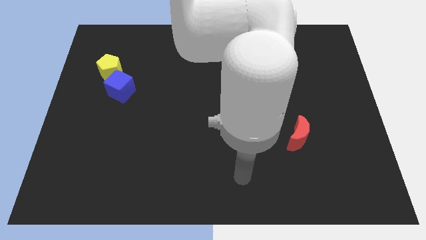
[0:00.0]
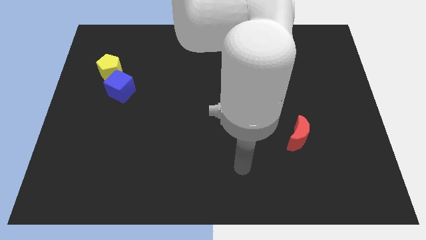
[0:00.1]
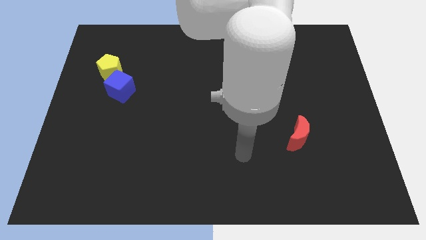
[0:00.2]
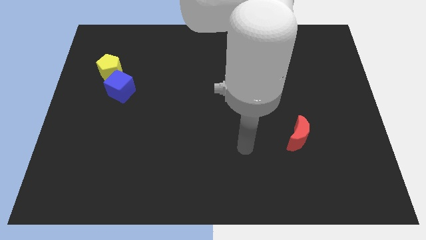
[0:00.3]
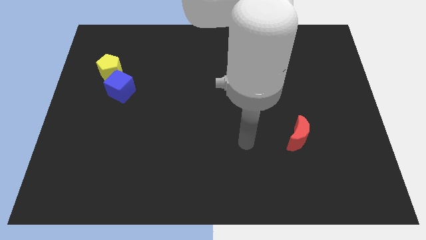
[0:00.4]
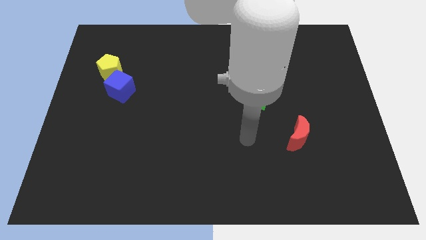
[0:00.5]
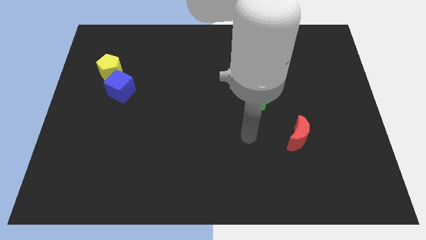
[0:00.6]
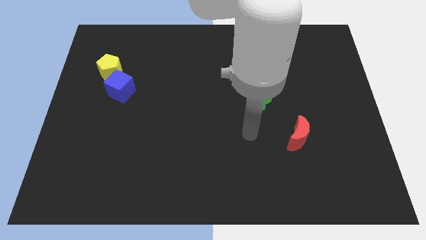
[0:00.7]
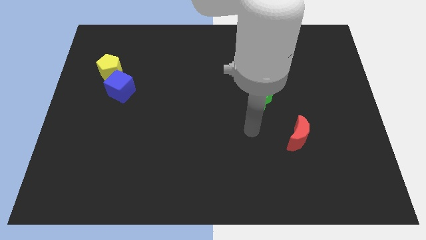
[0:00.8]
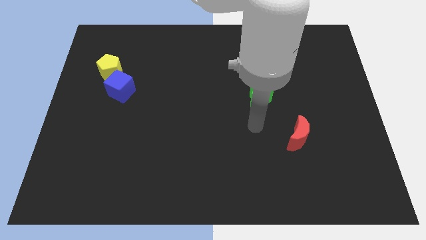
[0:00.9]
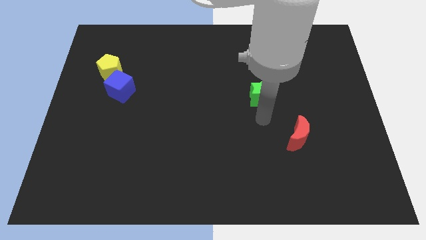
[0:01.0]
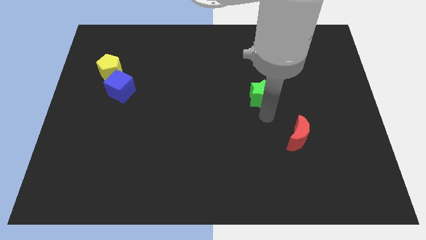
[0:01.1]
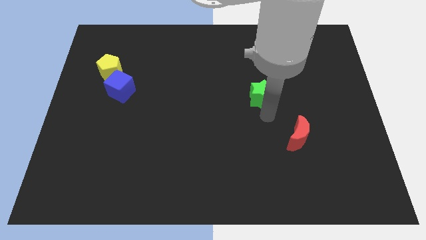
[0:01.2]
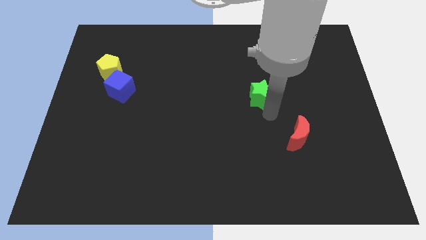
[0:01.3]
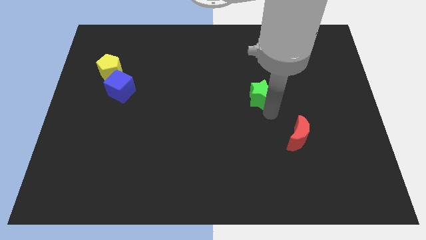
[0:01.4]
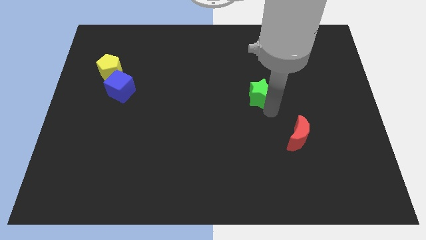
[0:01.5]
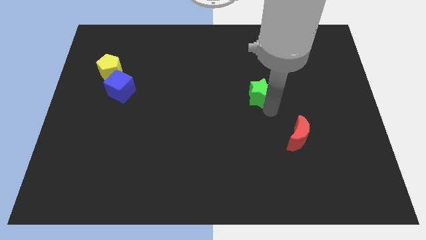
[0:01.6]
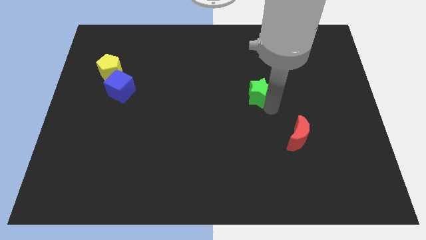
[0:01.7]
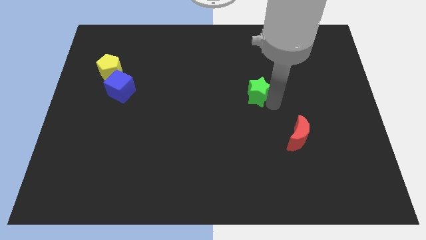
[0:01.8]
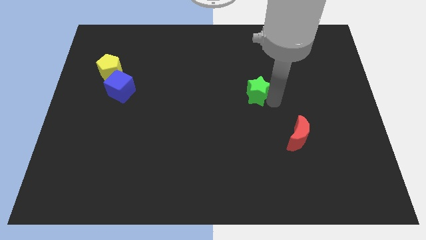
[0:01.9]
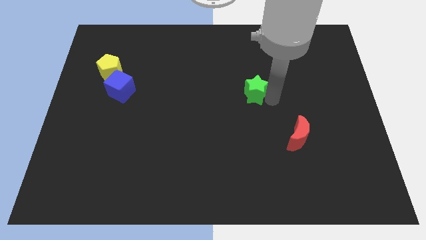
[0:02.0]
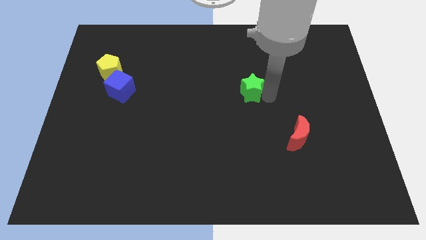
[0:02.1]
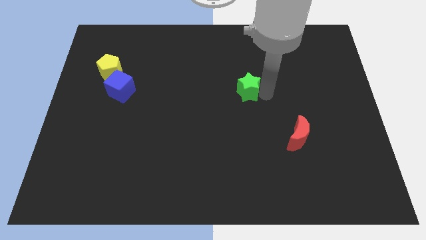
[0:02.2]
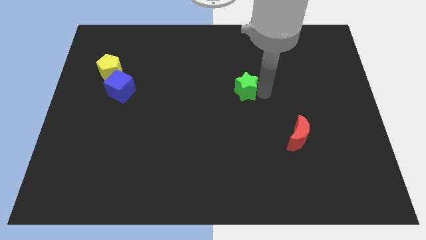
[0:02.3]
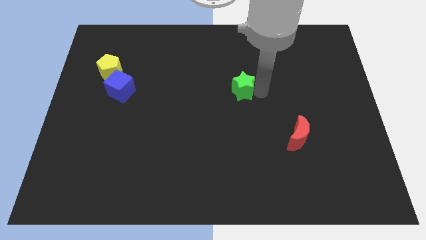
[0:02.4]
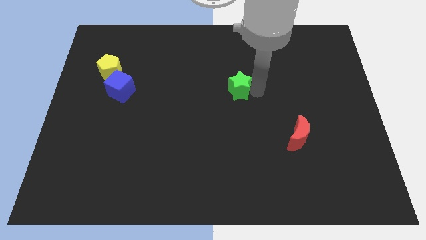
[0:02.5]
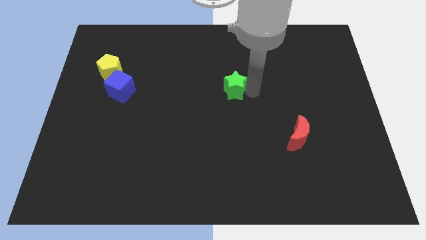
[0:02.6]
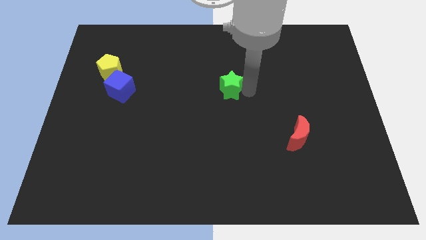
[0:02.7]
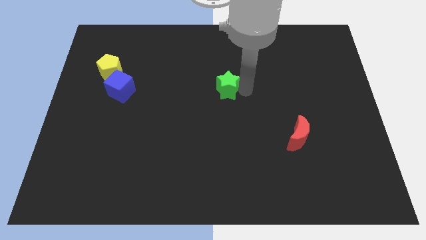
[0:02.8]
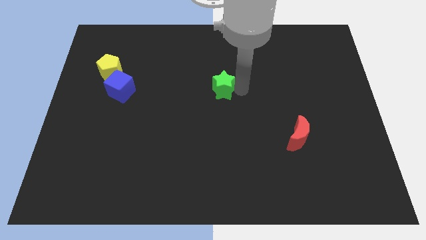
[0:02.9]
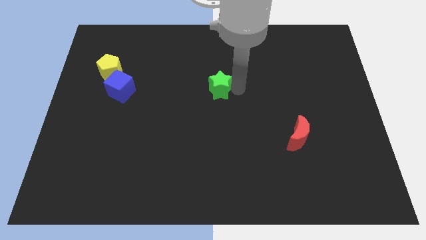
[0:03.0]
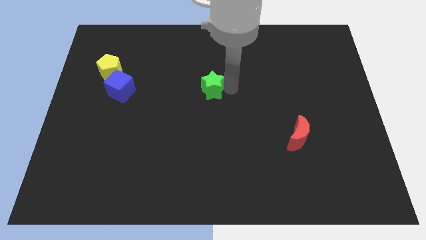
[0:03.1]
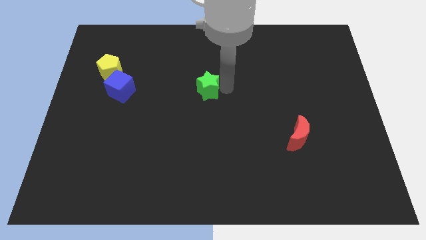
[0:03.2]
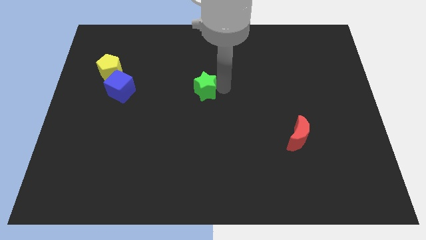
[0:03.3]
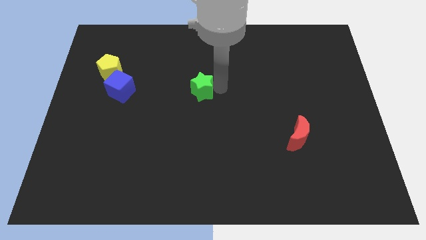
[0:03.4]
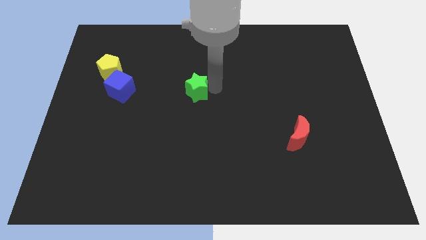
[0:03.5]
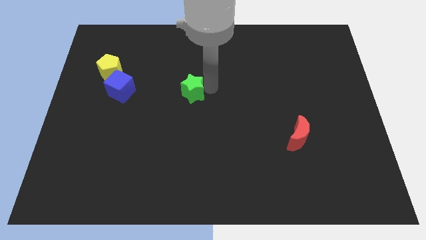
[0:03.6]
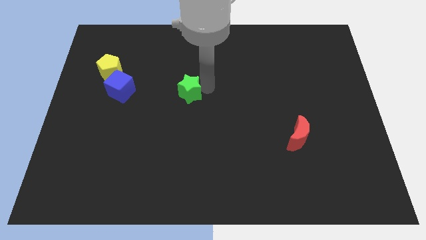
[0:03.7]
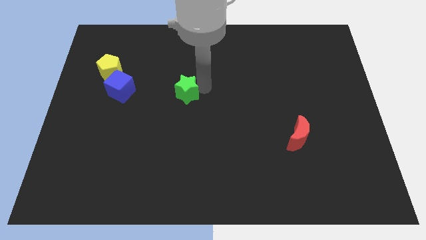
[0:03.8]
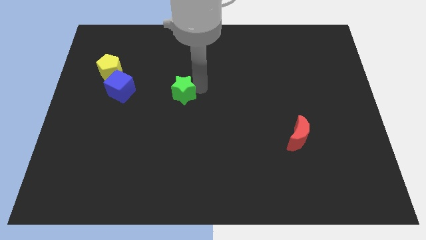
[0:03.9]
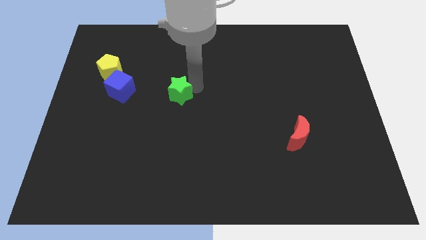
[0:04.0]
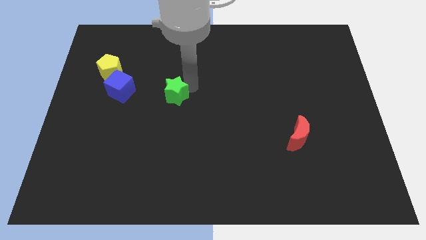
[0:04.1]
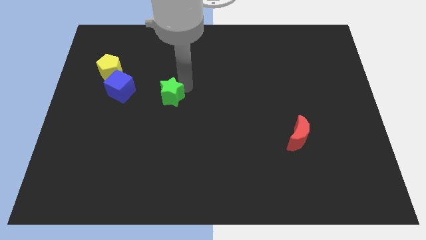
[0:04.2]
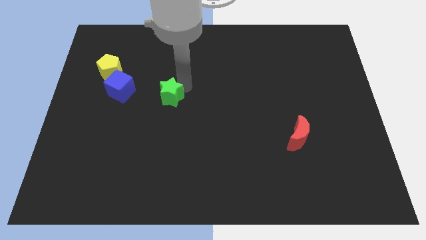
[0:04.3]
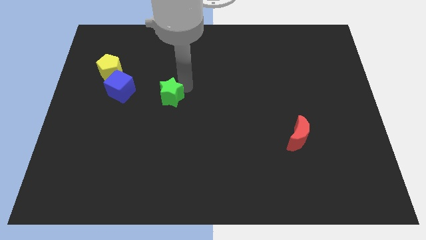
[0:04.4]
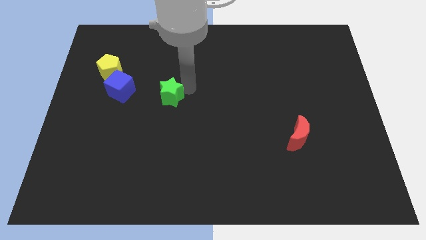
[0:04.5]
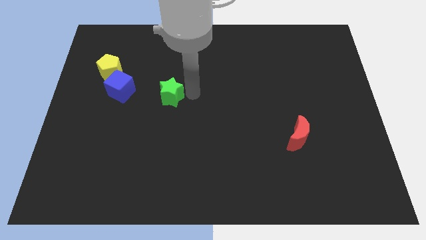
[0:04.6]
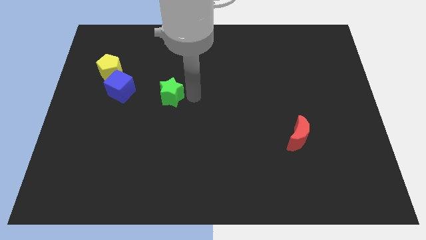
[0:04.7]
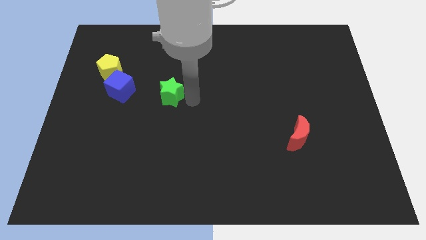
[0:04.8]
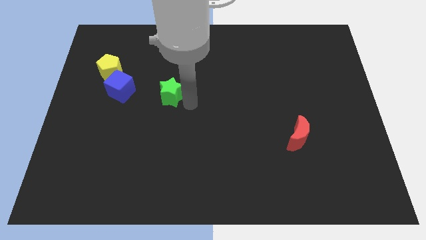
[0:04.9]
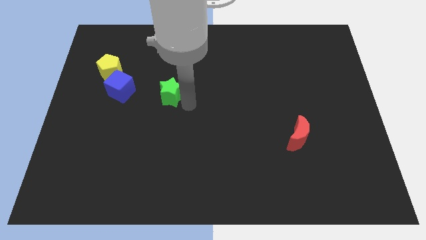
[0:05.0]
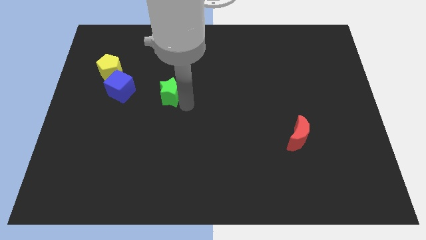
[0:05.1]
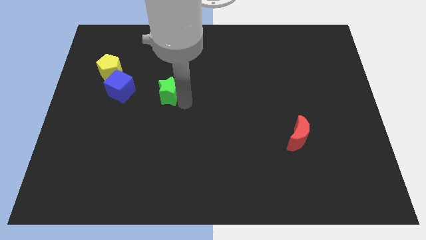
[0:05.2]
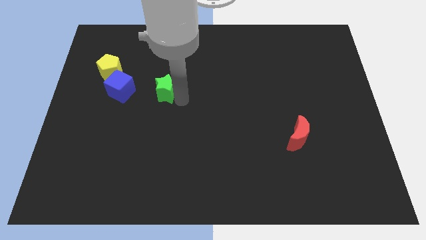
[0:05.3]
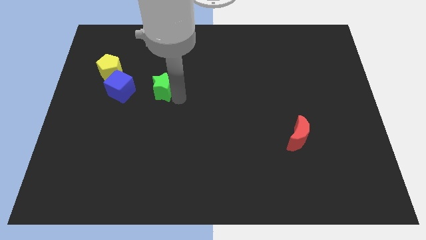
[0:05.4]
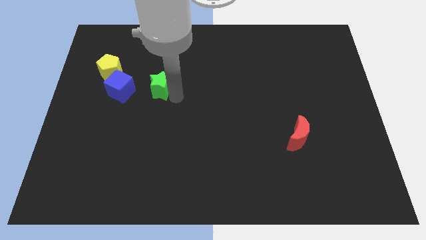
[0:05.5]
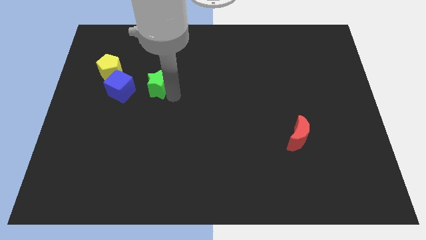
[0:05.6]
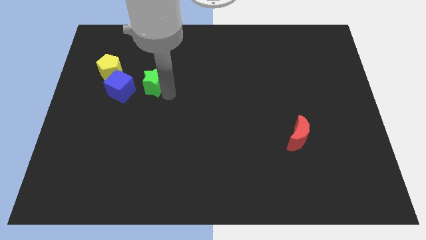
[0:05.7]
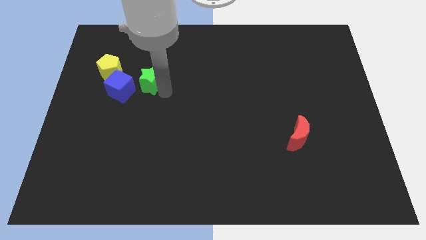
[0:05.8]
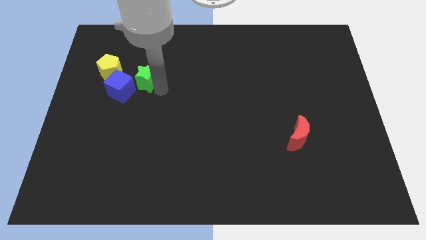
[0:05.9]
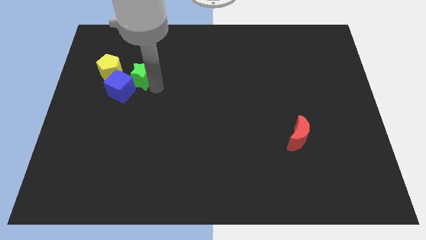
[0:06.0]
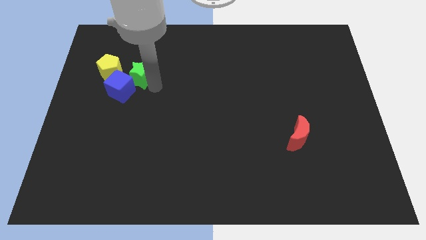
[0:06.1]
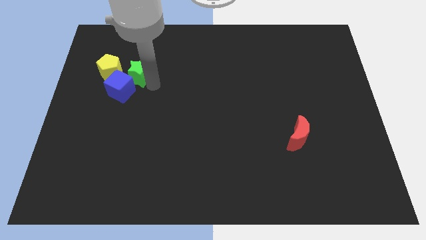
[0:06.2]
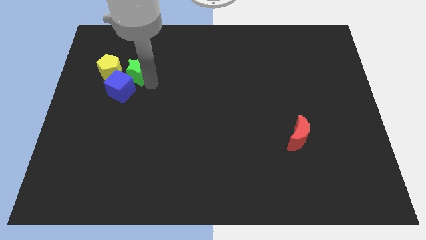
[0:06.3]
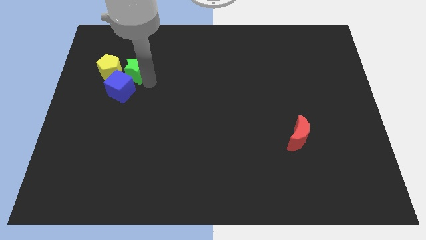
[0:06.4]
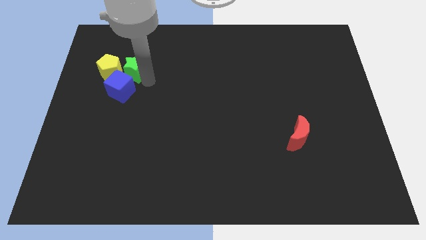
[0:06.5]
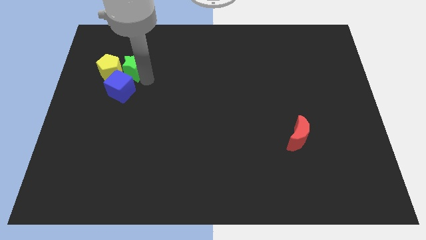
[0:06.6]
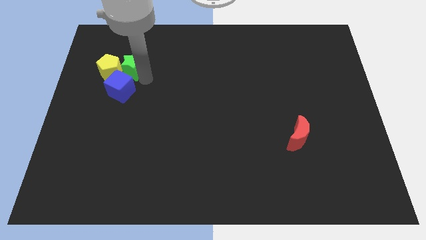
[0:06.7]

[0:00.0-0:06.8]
move the green block close to the yellow pentagon

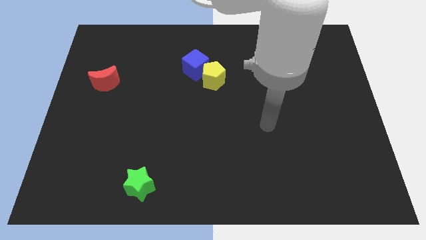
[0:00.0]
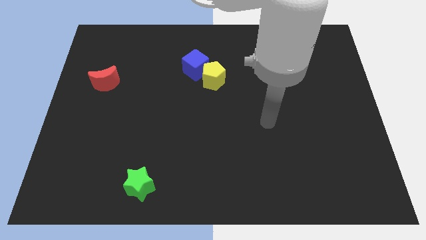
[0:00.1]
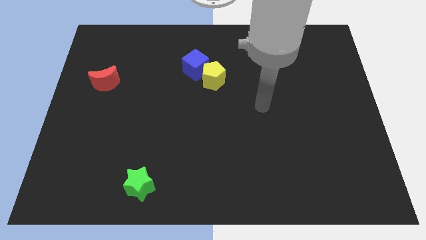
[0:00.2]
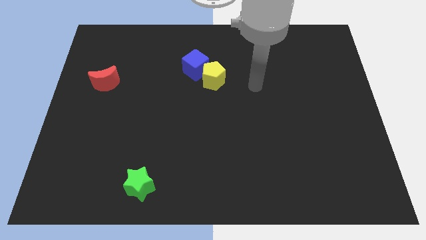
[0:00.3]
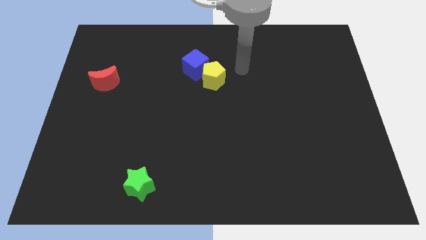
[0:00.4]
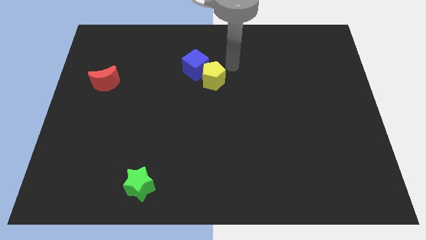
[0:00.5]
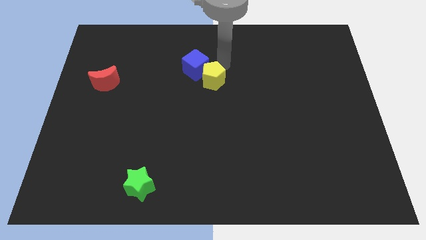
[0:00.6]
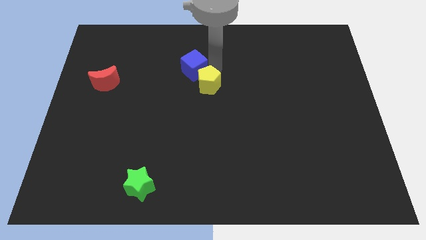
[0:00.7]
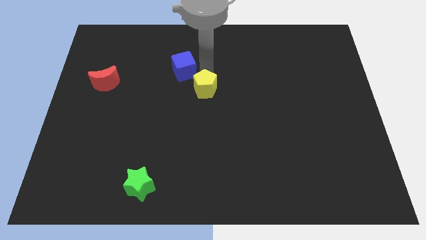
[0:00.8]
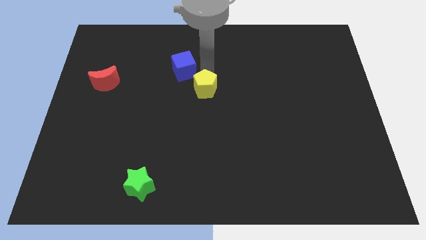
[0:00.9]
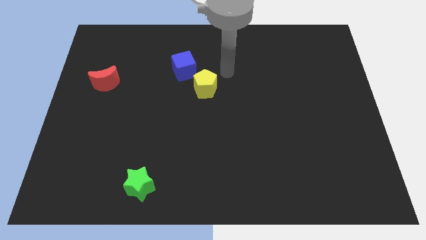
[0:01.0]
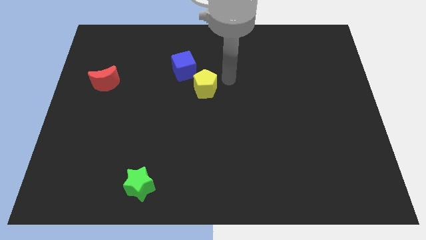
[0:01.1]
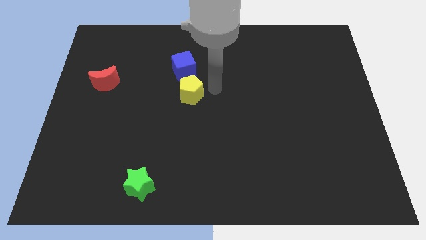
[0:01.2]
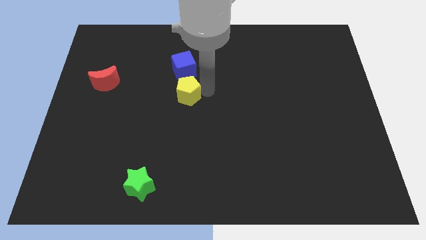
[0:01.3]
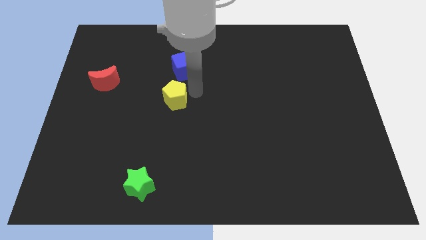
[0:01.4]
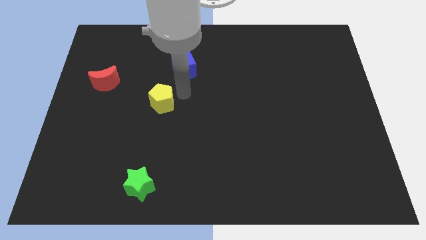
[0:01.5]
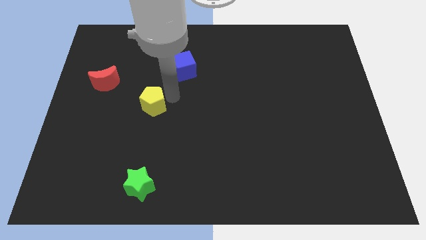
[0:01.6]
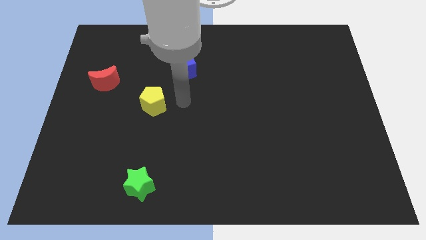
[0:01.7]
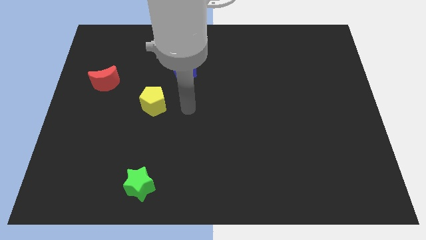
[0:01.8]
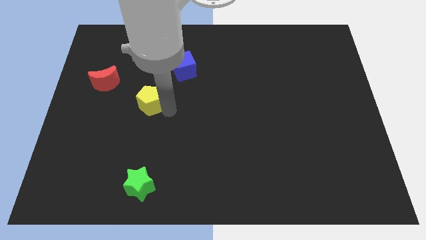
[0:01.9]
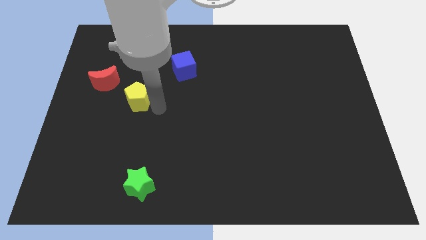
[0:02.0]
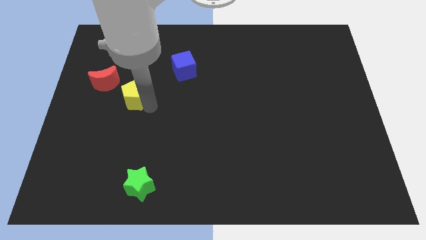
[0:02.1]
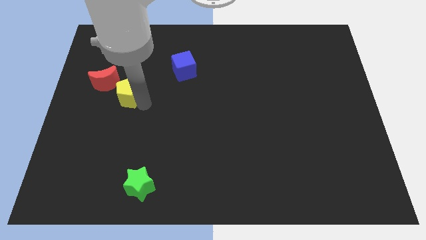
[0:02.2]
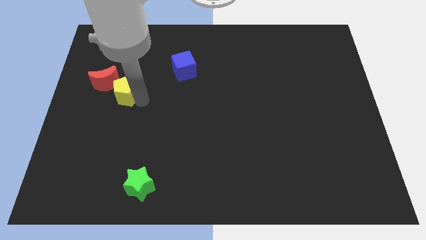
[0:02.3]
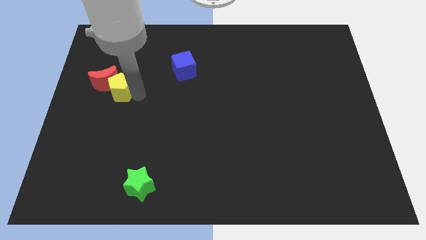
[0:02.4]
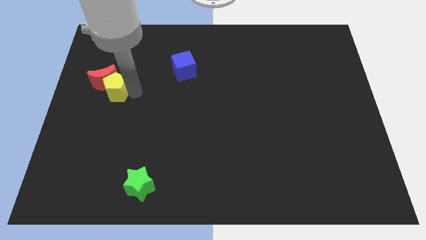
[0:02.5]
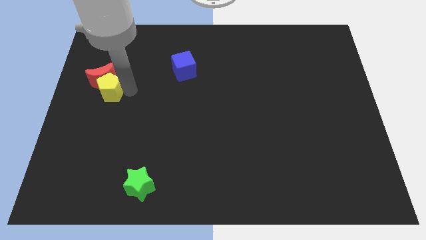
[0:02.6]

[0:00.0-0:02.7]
push the yellow pentagon to the red block
